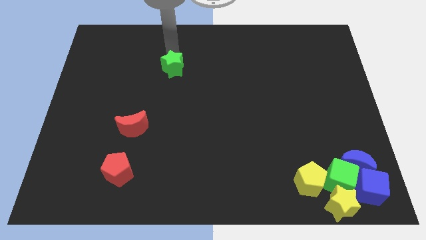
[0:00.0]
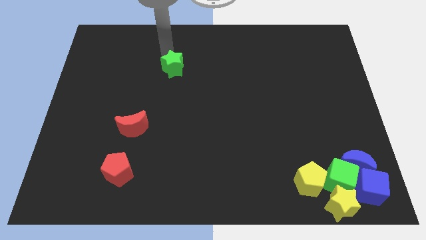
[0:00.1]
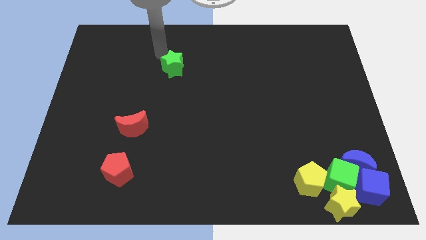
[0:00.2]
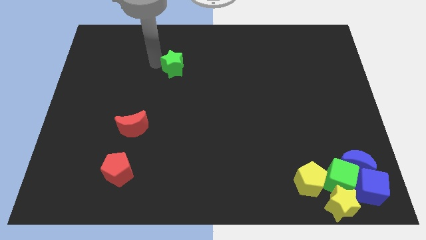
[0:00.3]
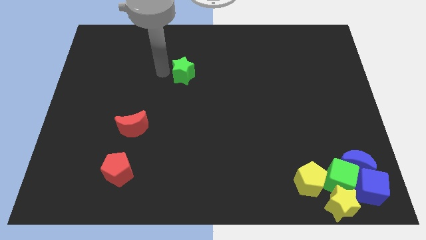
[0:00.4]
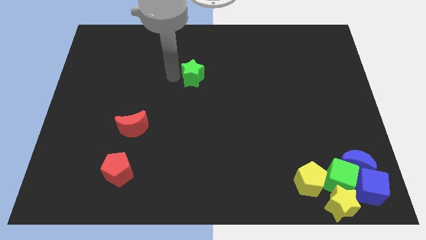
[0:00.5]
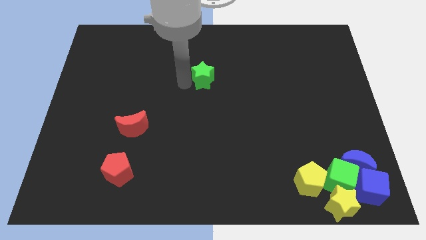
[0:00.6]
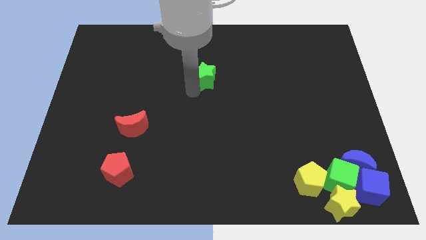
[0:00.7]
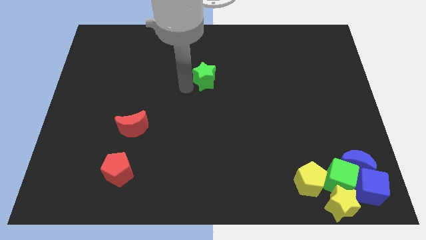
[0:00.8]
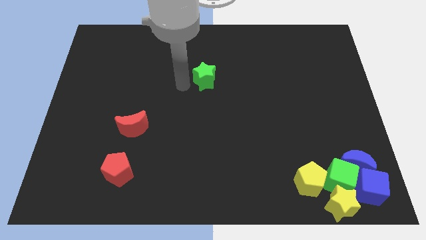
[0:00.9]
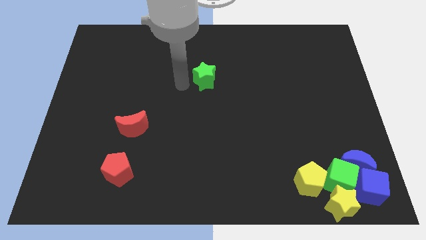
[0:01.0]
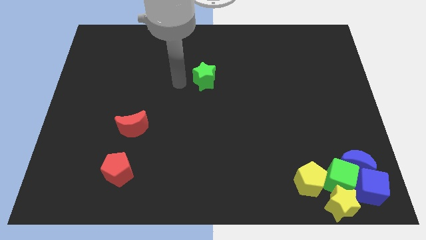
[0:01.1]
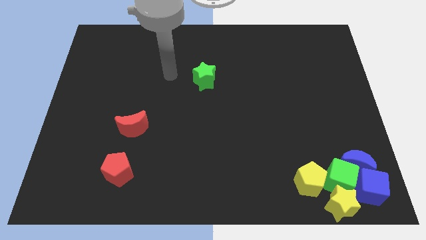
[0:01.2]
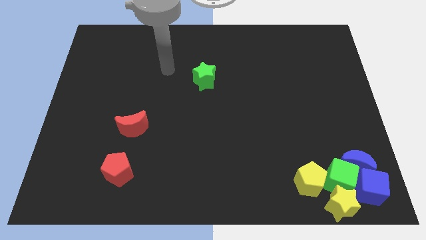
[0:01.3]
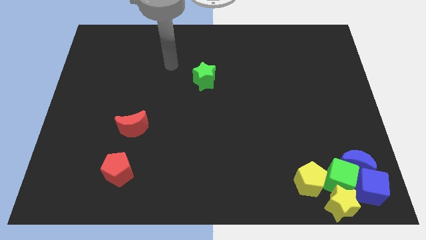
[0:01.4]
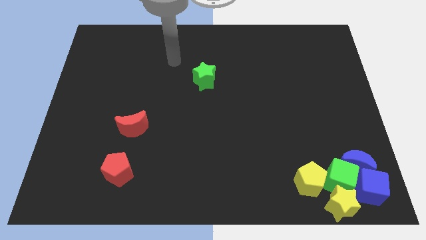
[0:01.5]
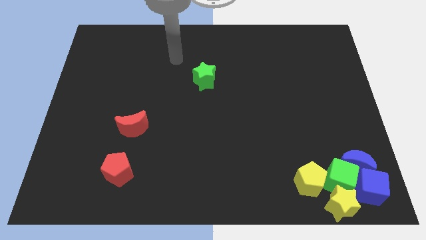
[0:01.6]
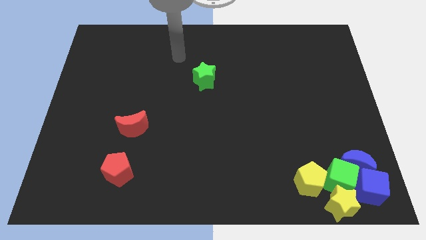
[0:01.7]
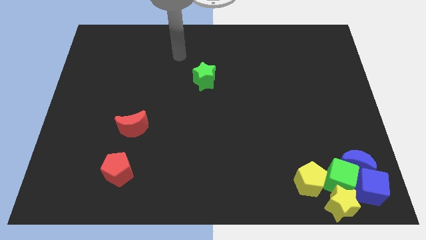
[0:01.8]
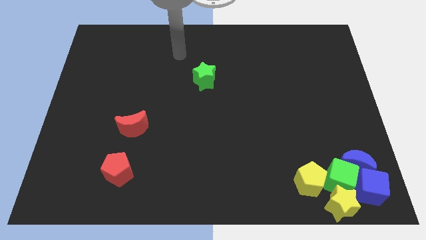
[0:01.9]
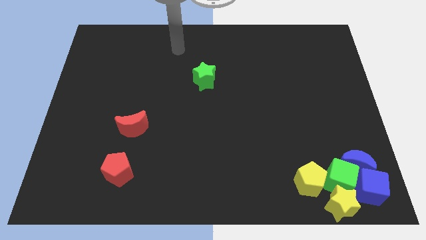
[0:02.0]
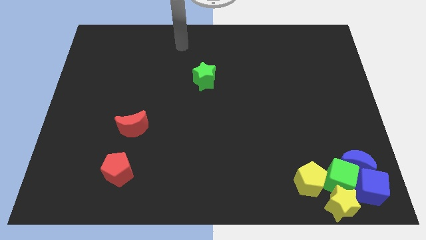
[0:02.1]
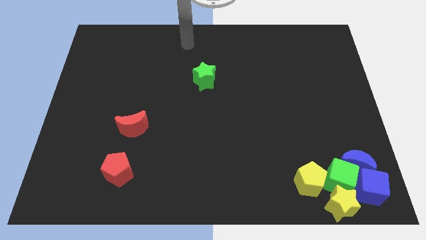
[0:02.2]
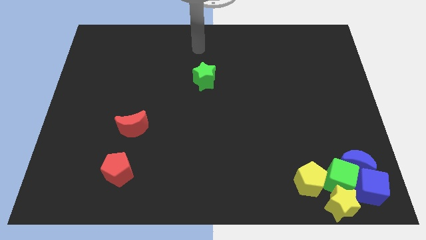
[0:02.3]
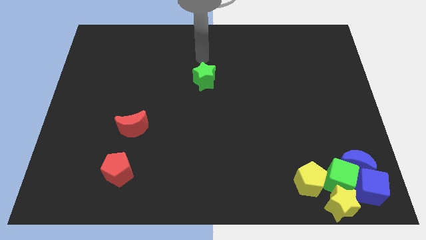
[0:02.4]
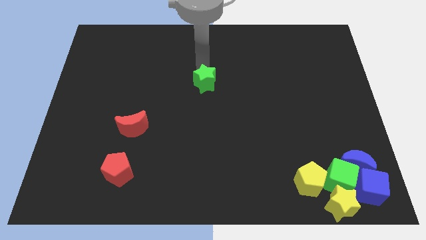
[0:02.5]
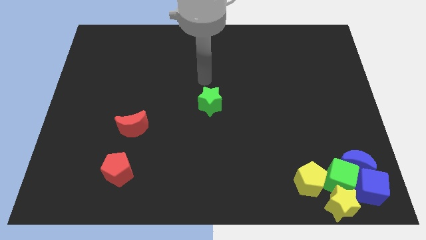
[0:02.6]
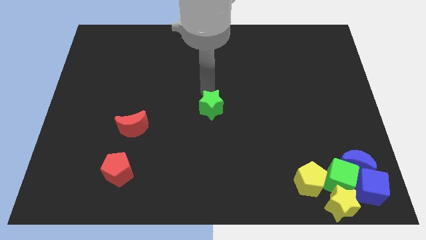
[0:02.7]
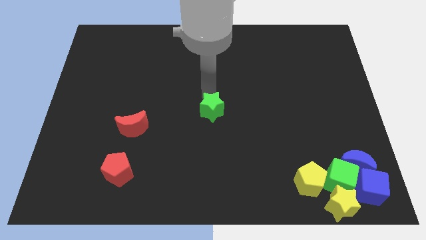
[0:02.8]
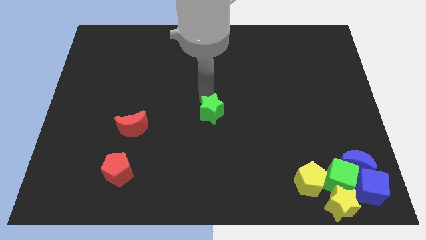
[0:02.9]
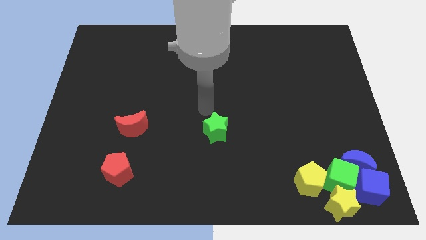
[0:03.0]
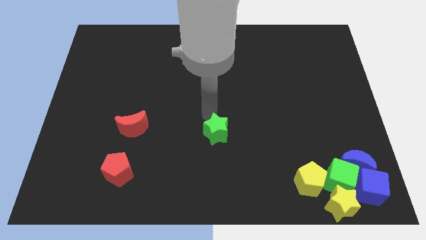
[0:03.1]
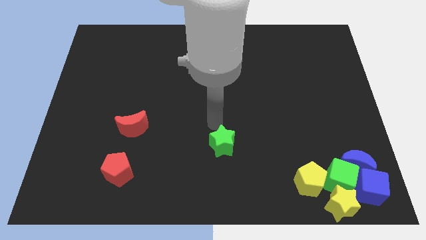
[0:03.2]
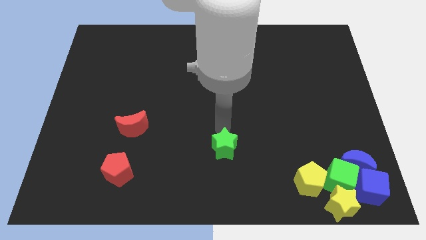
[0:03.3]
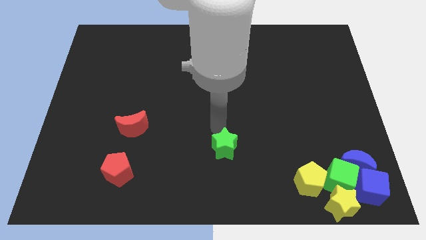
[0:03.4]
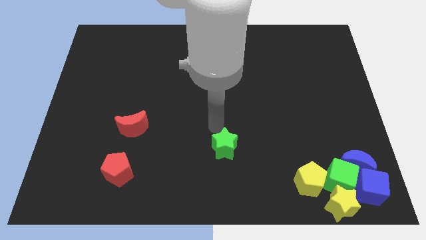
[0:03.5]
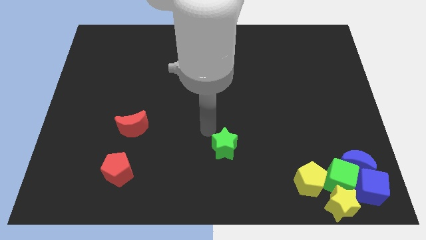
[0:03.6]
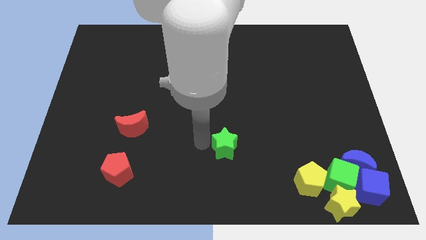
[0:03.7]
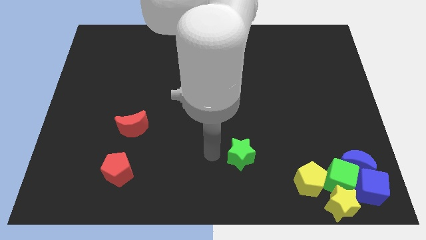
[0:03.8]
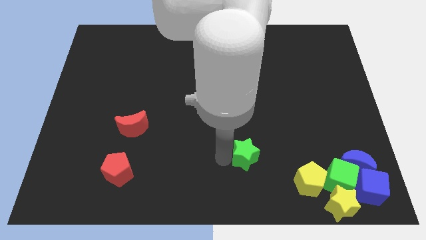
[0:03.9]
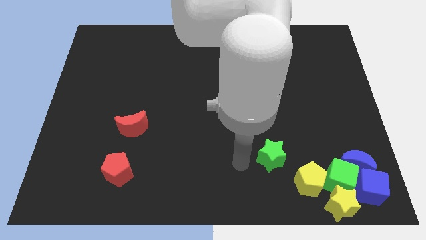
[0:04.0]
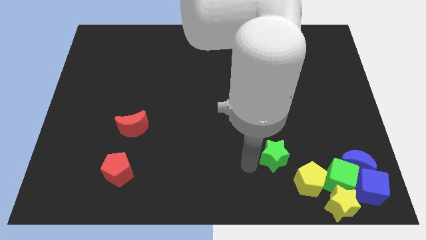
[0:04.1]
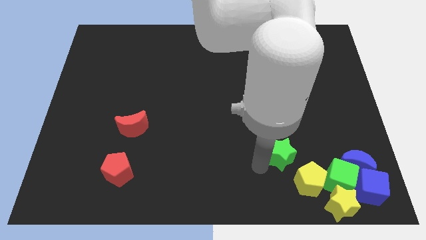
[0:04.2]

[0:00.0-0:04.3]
move the green star towards the yellow pentagon

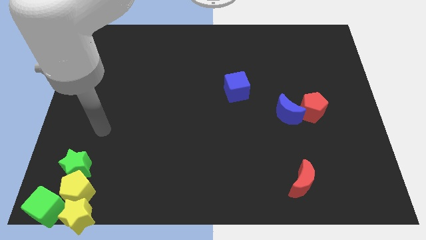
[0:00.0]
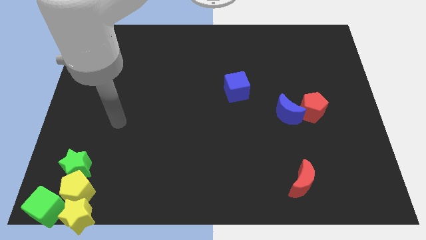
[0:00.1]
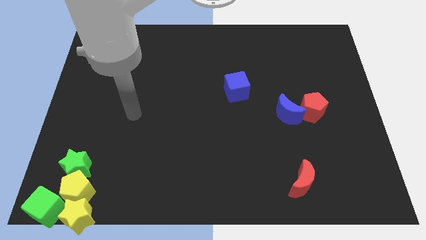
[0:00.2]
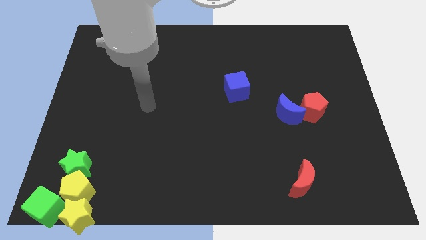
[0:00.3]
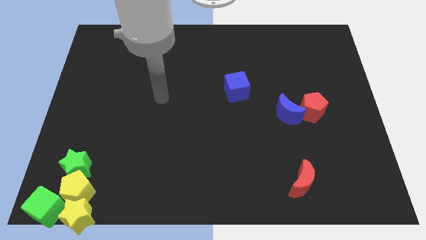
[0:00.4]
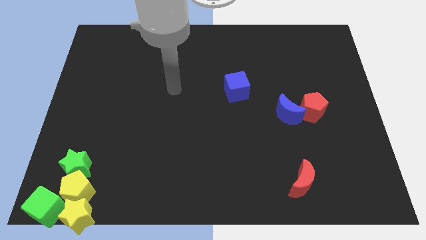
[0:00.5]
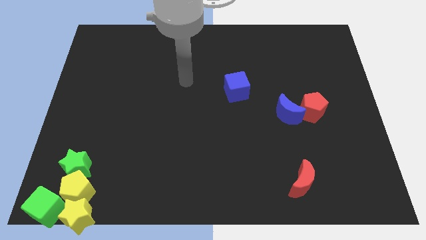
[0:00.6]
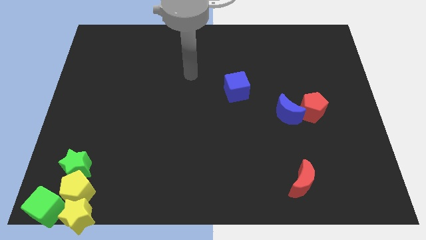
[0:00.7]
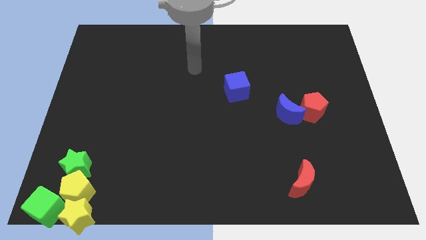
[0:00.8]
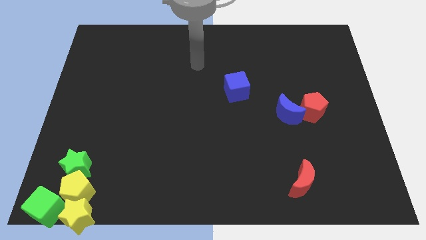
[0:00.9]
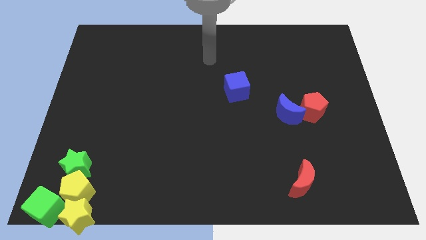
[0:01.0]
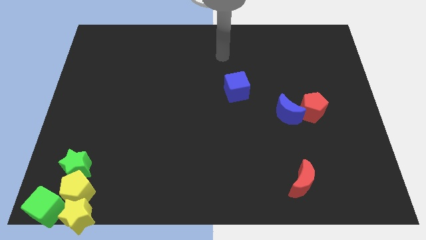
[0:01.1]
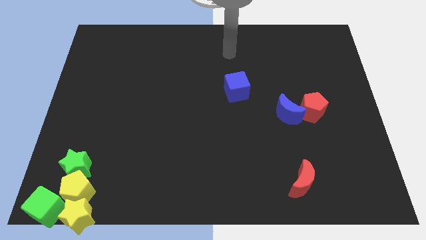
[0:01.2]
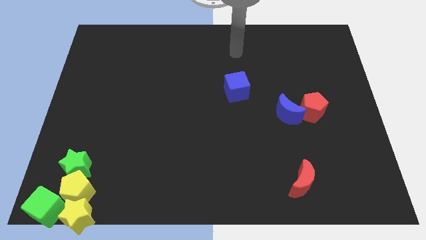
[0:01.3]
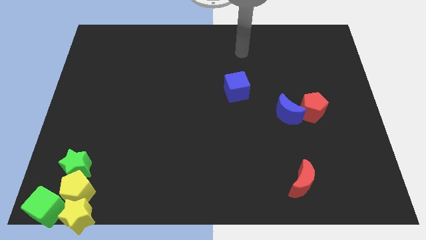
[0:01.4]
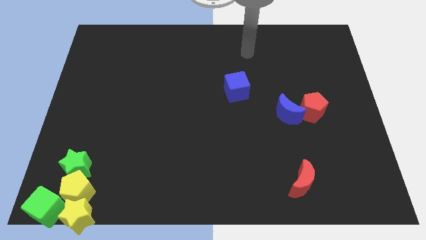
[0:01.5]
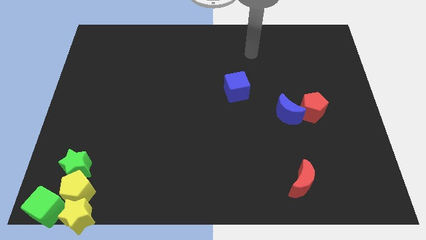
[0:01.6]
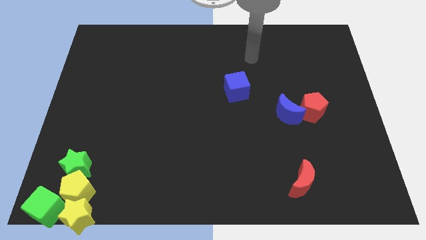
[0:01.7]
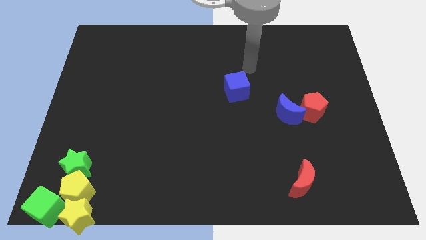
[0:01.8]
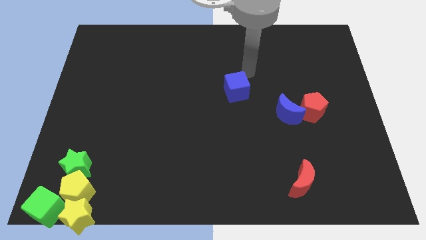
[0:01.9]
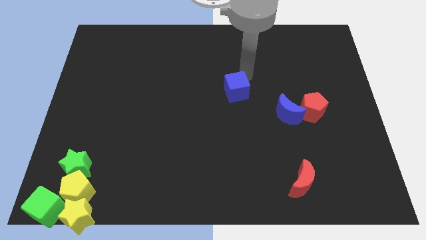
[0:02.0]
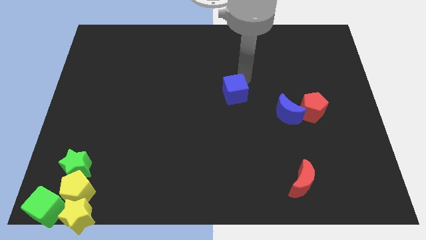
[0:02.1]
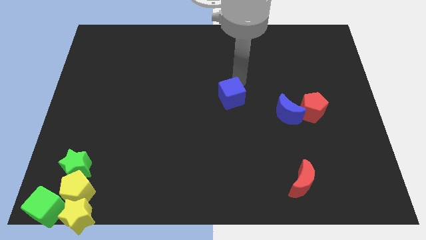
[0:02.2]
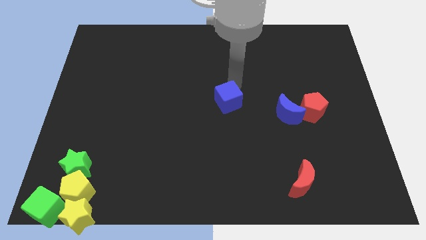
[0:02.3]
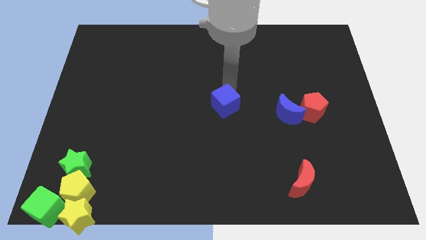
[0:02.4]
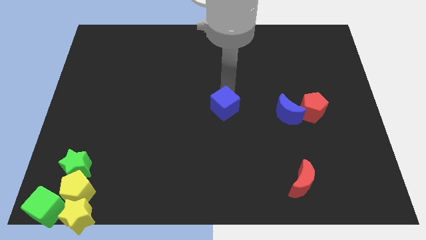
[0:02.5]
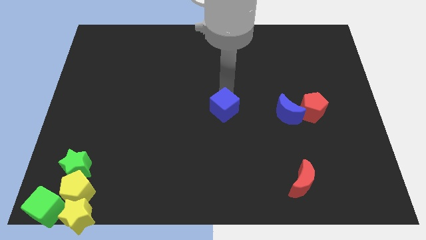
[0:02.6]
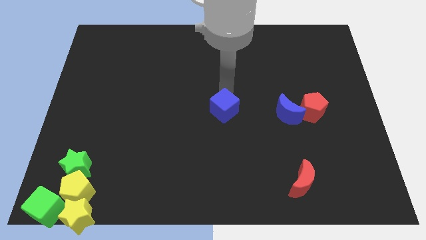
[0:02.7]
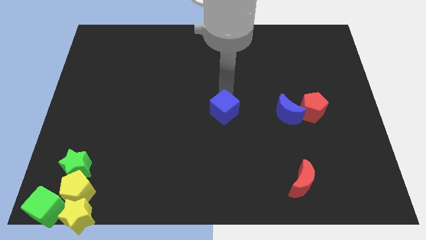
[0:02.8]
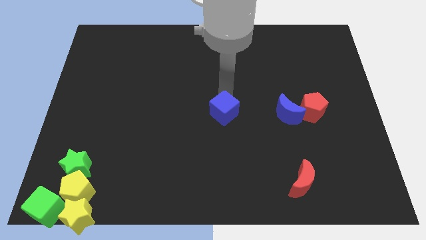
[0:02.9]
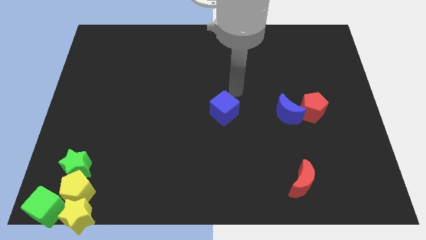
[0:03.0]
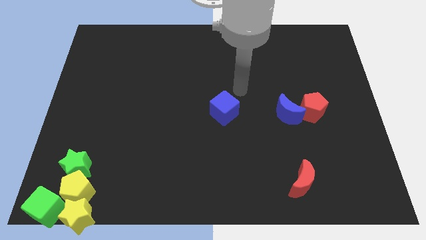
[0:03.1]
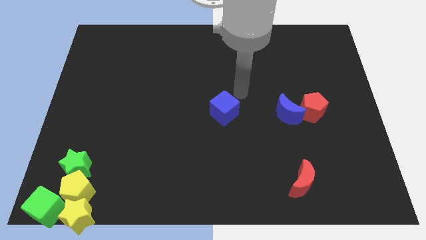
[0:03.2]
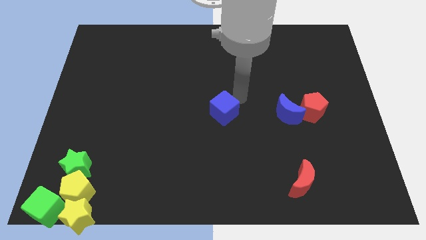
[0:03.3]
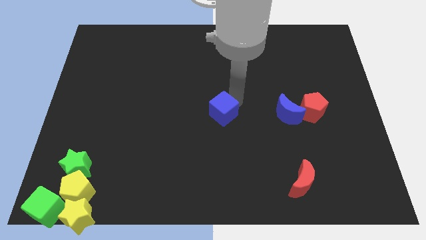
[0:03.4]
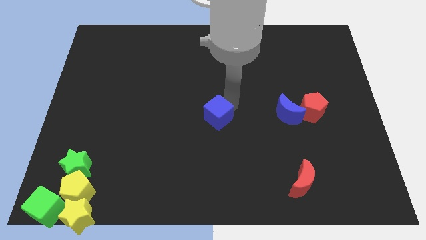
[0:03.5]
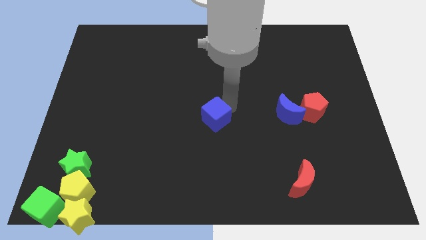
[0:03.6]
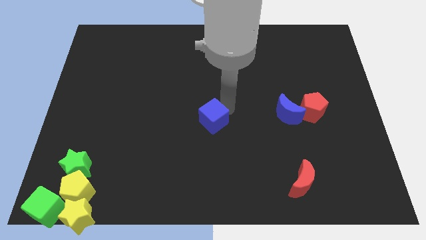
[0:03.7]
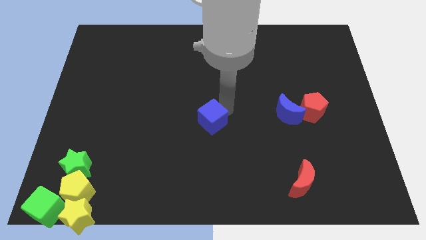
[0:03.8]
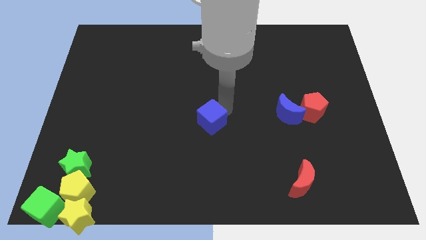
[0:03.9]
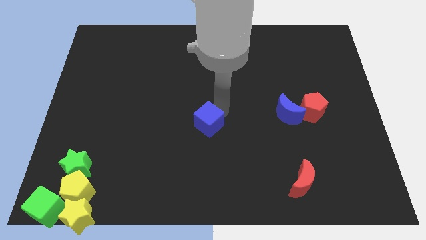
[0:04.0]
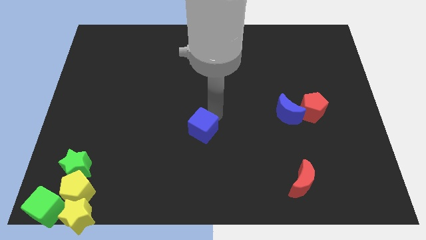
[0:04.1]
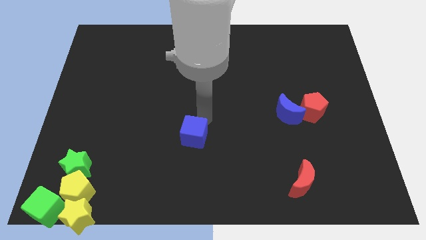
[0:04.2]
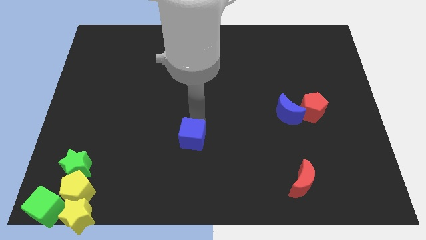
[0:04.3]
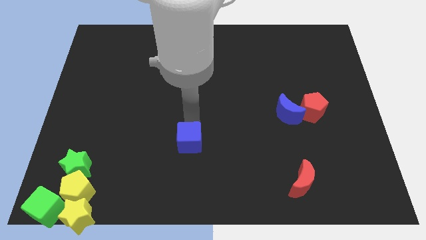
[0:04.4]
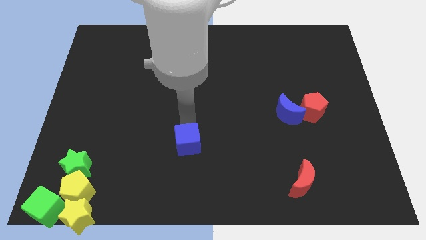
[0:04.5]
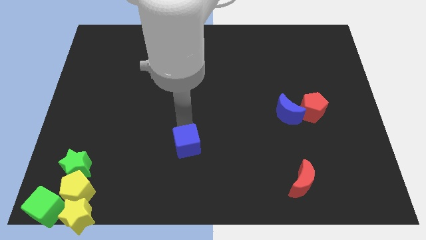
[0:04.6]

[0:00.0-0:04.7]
slide the blue cube diagonally bottom left to the blue moon
